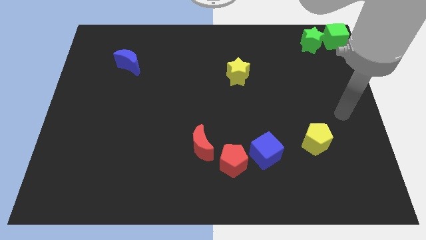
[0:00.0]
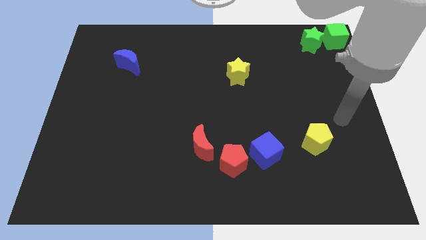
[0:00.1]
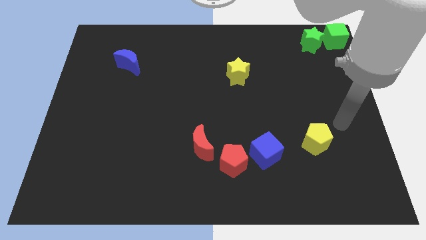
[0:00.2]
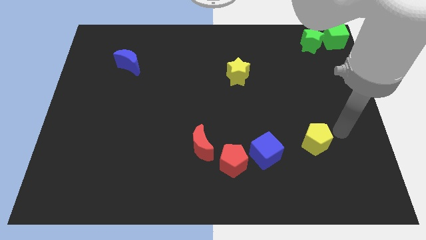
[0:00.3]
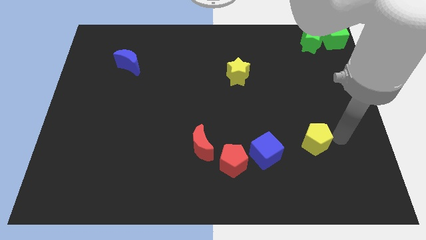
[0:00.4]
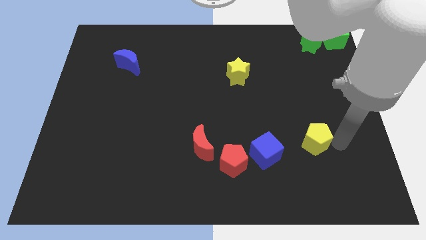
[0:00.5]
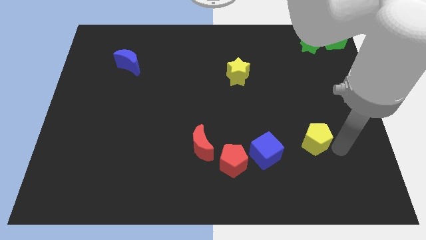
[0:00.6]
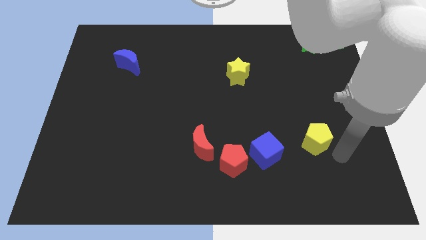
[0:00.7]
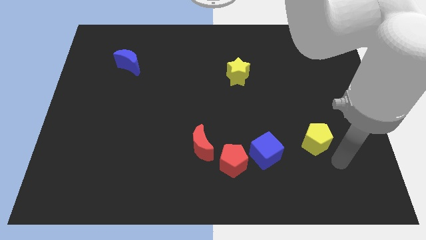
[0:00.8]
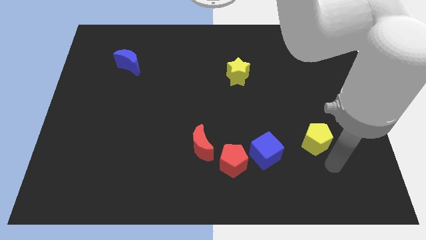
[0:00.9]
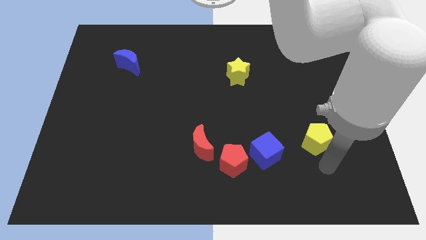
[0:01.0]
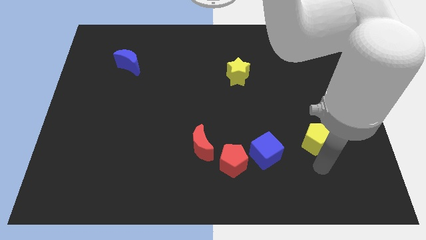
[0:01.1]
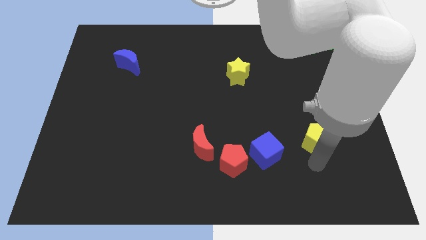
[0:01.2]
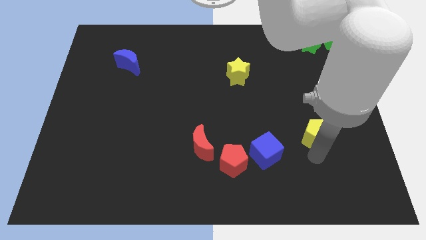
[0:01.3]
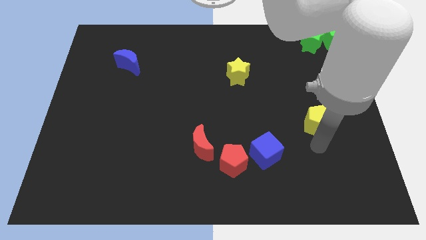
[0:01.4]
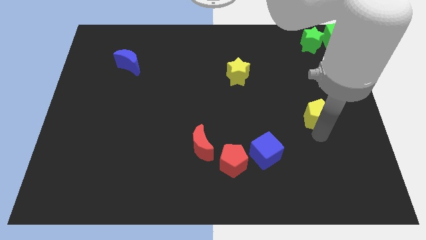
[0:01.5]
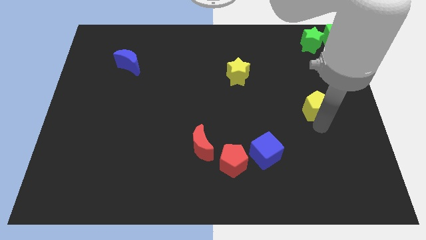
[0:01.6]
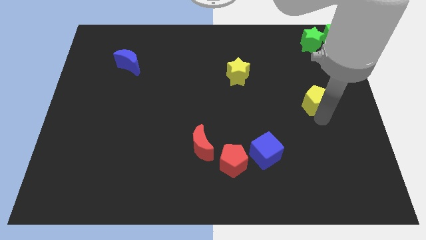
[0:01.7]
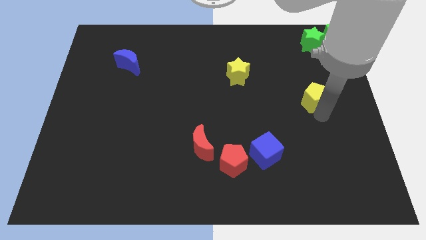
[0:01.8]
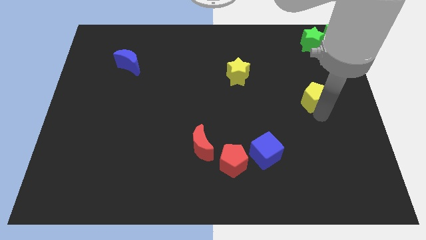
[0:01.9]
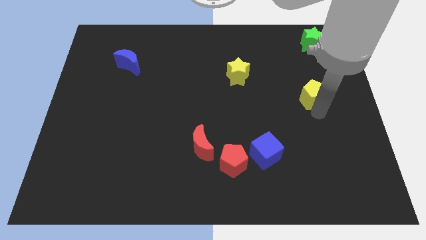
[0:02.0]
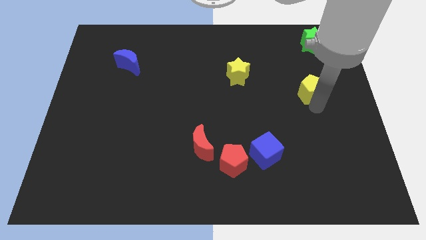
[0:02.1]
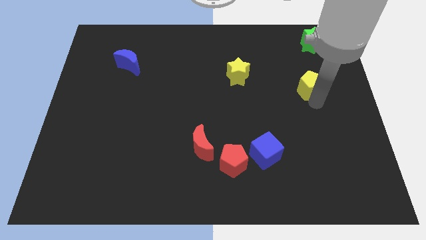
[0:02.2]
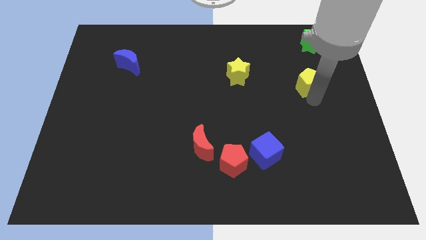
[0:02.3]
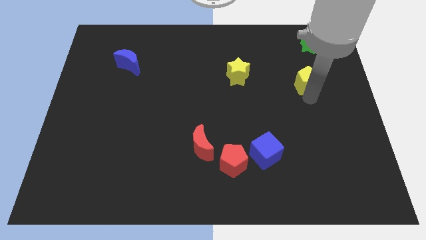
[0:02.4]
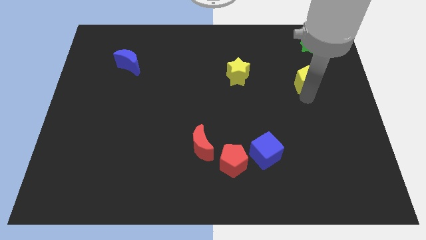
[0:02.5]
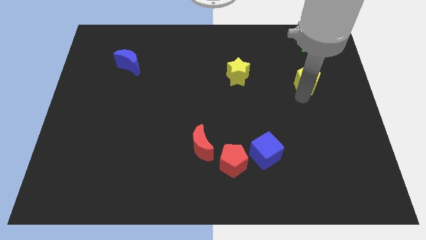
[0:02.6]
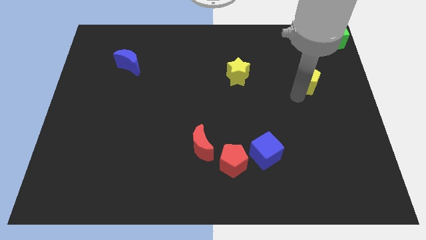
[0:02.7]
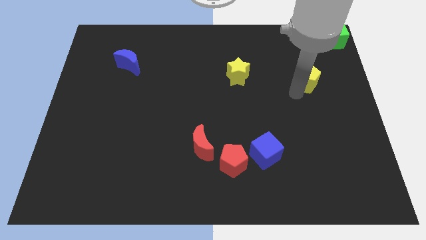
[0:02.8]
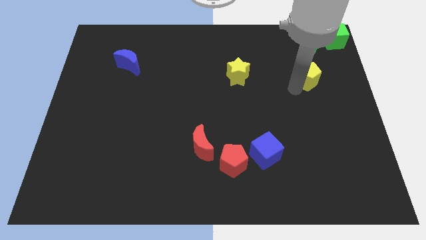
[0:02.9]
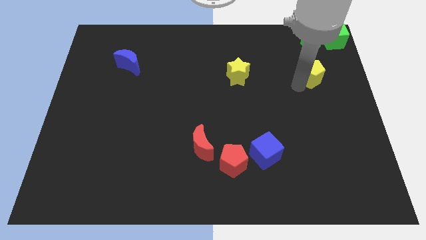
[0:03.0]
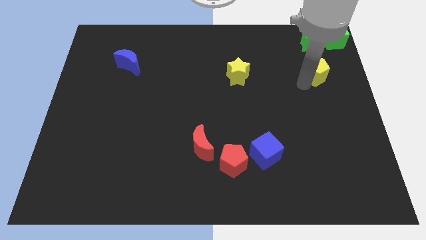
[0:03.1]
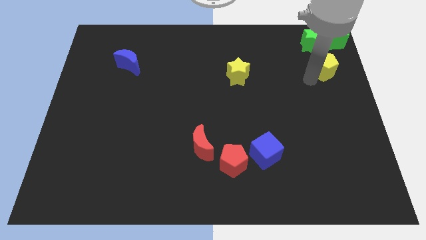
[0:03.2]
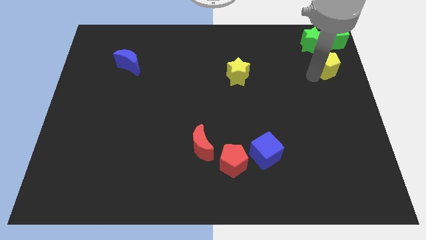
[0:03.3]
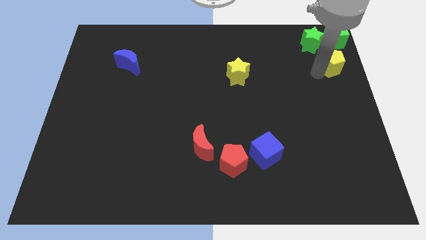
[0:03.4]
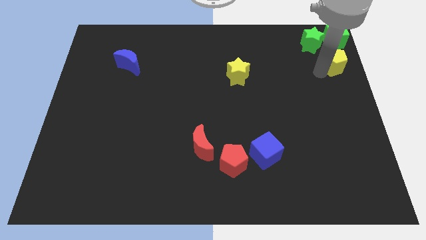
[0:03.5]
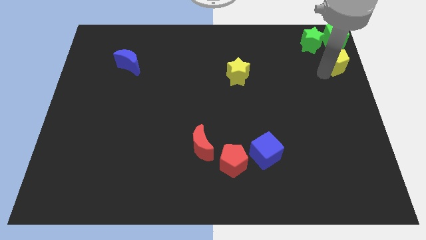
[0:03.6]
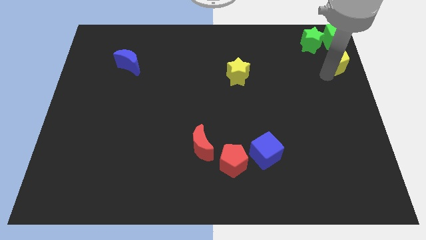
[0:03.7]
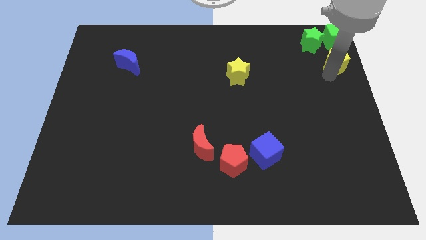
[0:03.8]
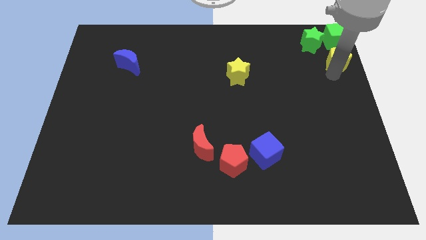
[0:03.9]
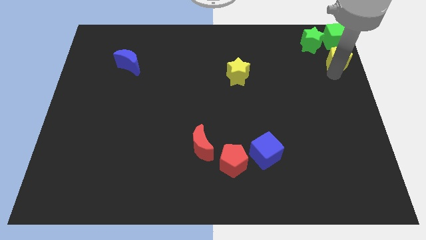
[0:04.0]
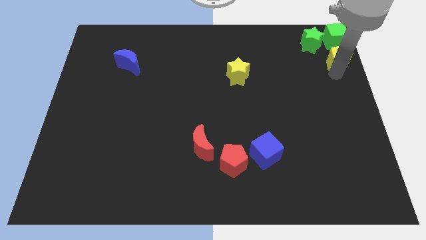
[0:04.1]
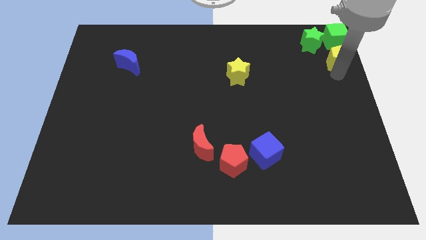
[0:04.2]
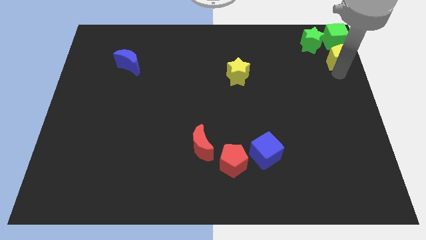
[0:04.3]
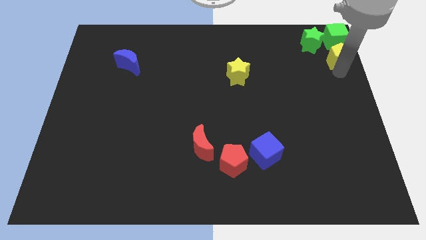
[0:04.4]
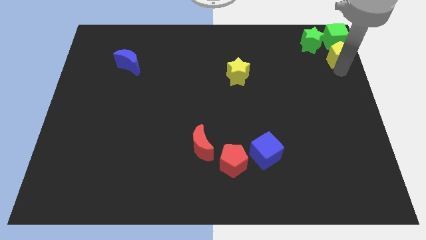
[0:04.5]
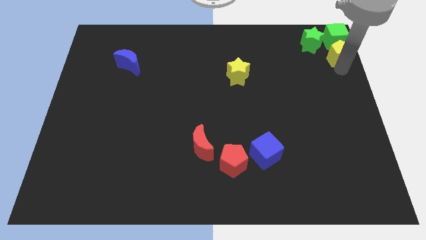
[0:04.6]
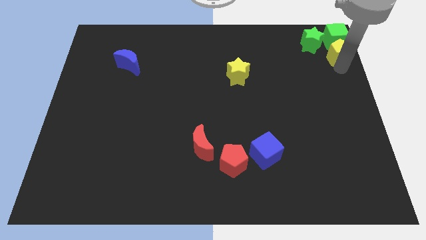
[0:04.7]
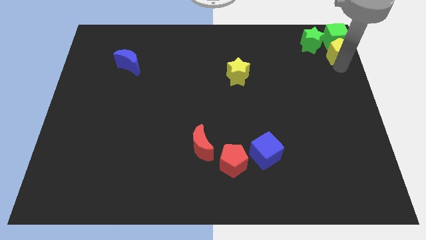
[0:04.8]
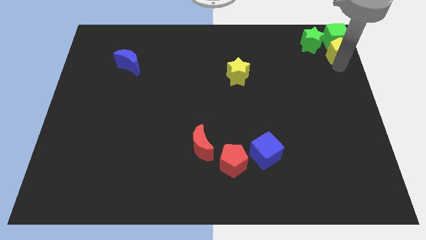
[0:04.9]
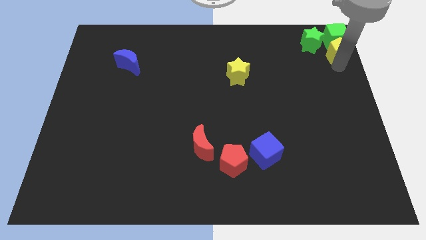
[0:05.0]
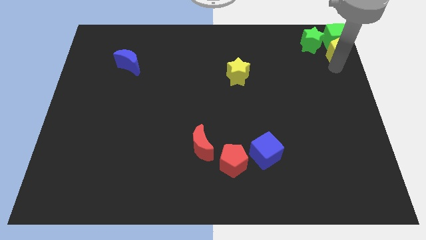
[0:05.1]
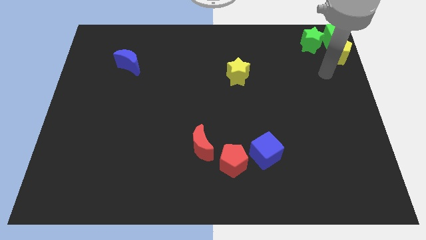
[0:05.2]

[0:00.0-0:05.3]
push the yellow pentagon to the bottom of the green cube

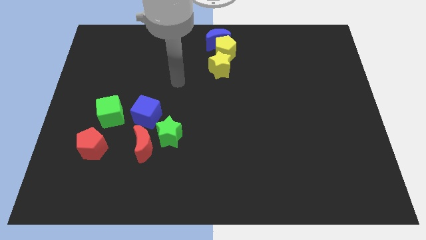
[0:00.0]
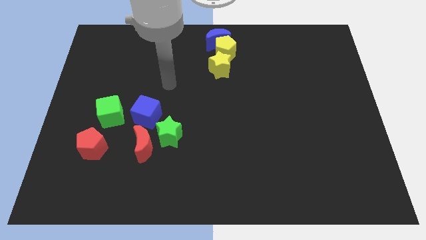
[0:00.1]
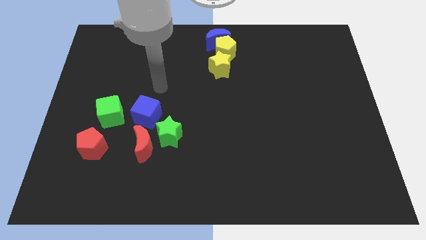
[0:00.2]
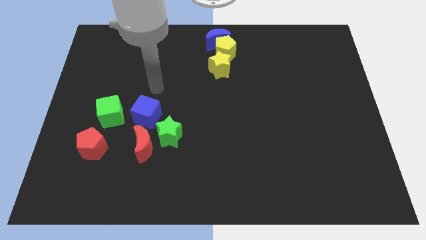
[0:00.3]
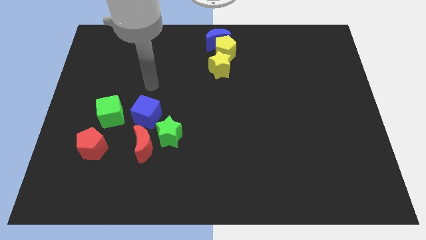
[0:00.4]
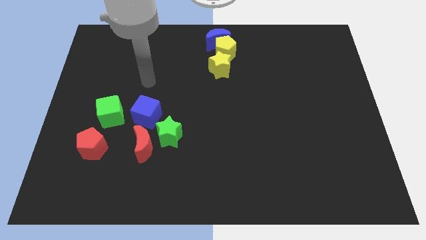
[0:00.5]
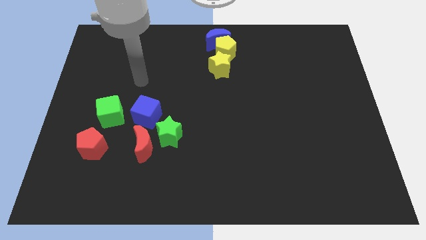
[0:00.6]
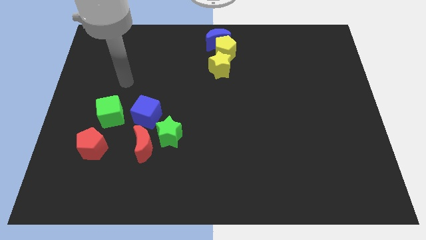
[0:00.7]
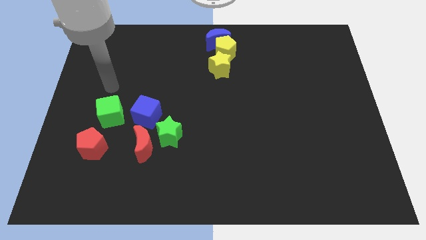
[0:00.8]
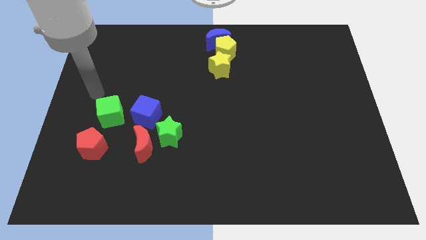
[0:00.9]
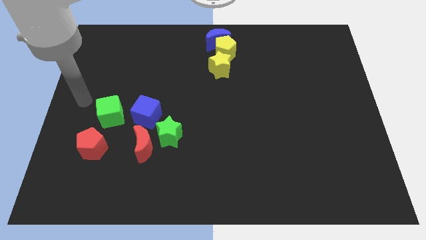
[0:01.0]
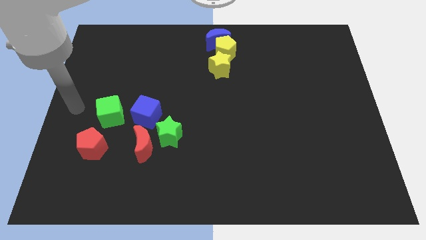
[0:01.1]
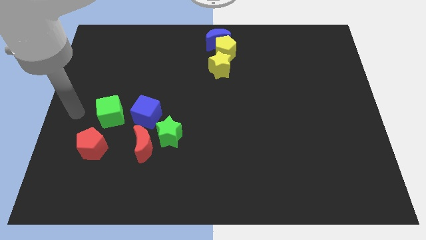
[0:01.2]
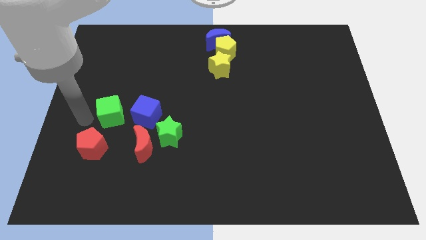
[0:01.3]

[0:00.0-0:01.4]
place your arm at the left side of the green cube

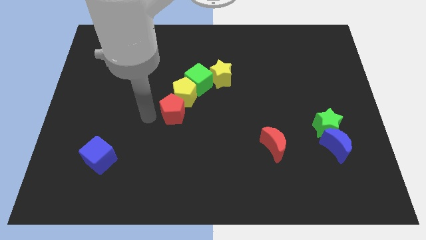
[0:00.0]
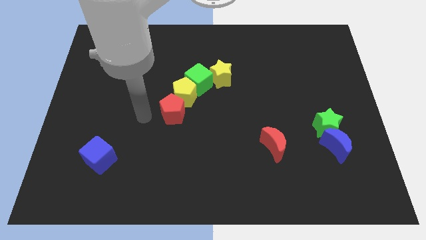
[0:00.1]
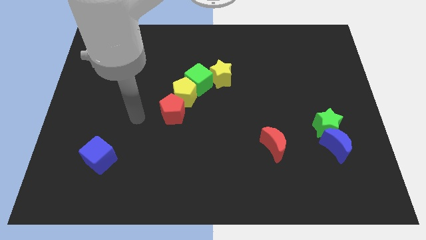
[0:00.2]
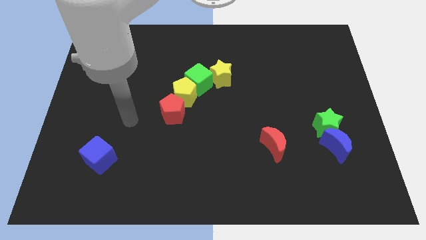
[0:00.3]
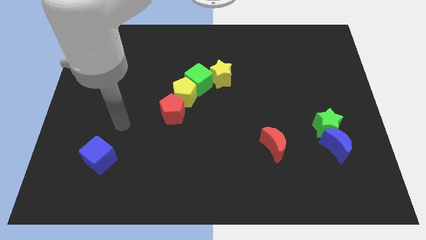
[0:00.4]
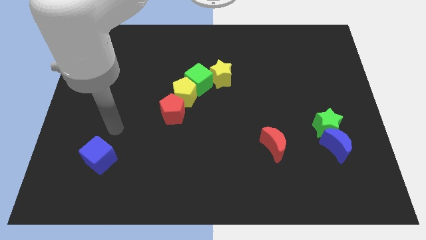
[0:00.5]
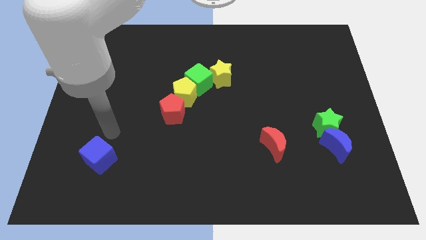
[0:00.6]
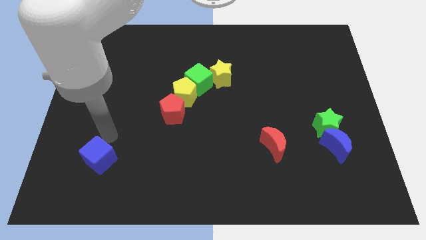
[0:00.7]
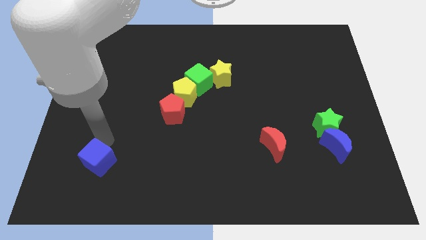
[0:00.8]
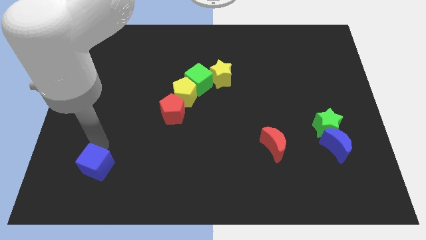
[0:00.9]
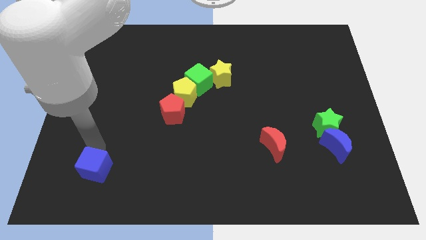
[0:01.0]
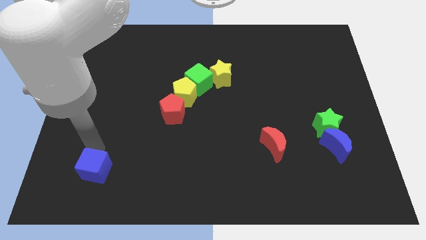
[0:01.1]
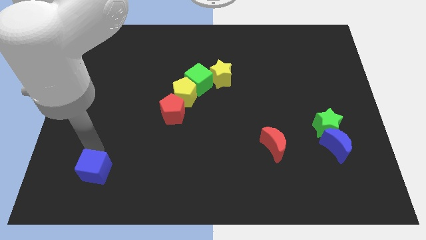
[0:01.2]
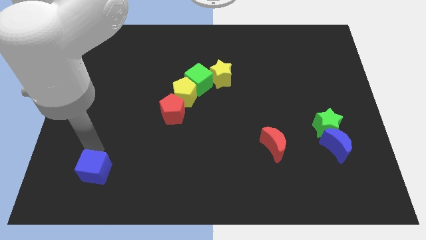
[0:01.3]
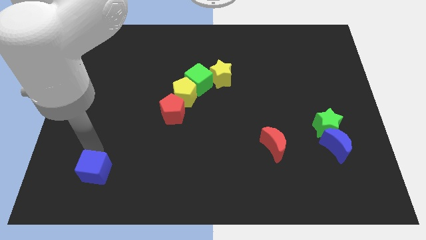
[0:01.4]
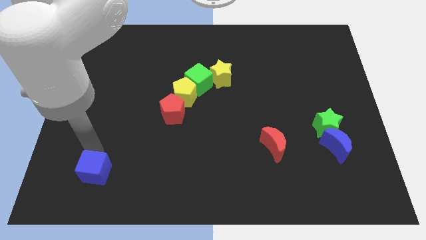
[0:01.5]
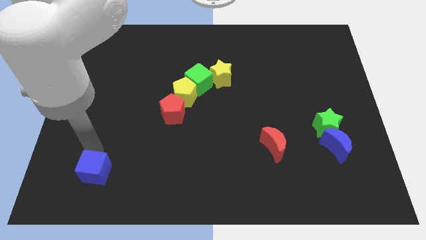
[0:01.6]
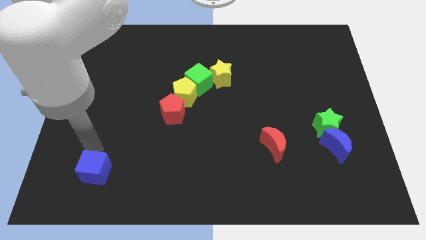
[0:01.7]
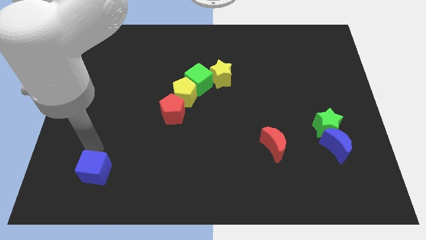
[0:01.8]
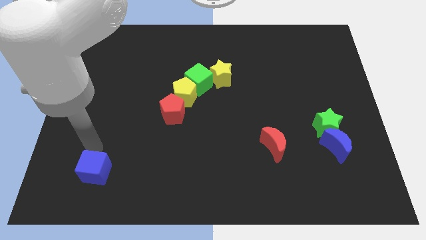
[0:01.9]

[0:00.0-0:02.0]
move your arm into the blue cube

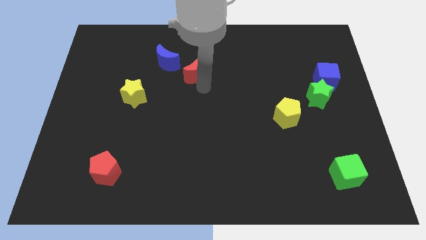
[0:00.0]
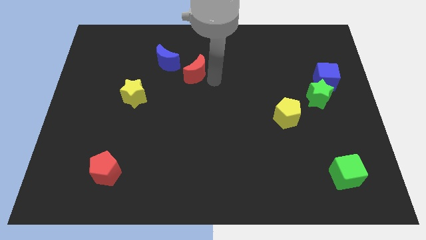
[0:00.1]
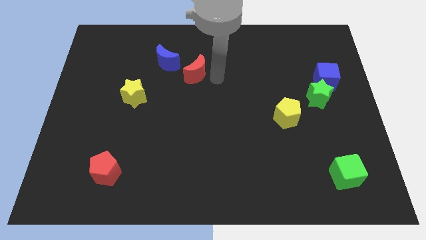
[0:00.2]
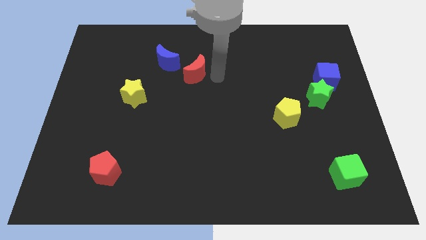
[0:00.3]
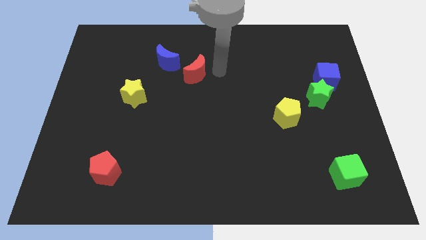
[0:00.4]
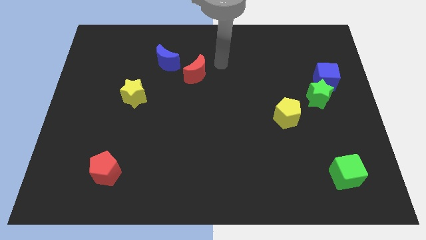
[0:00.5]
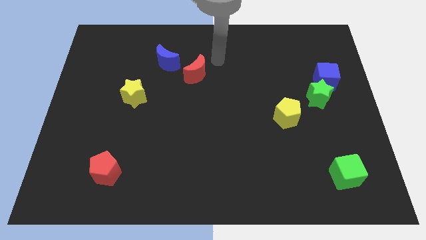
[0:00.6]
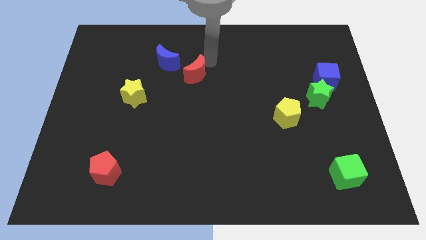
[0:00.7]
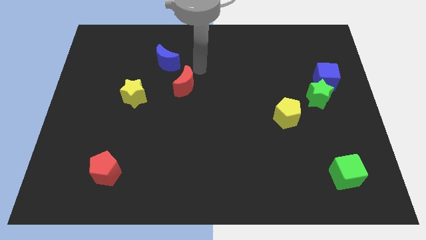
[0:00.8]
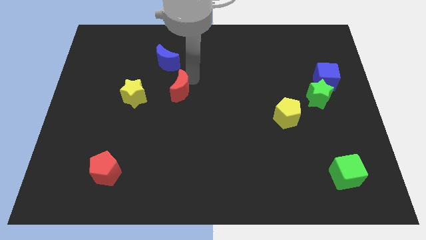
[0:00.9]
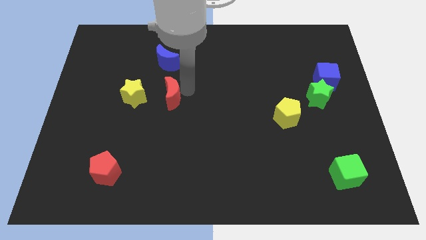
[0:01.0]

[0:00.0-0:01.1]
place the red moon parallel to the yellow star
